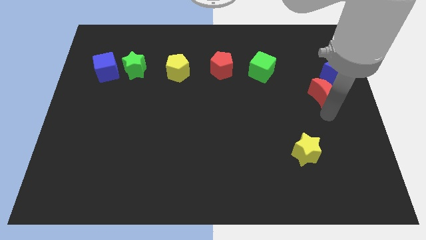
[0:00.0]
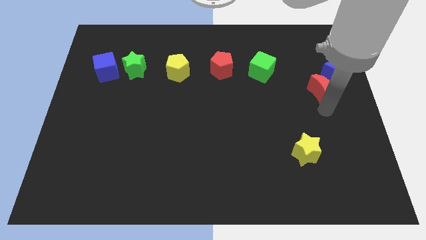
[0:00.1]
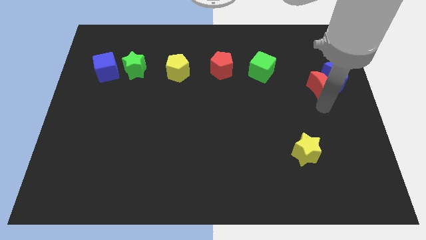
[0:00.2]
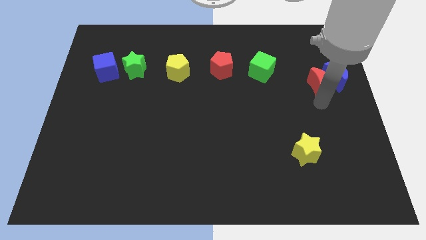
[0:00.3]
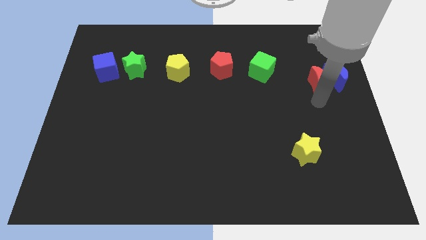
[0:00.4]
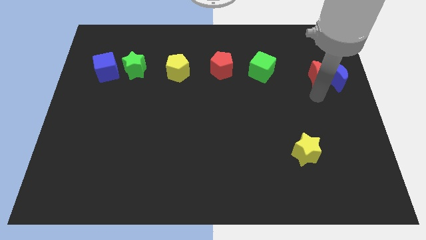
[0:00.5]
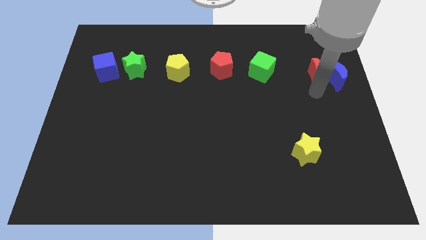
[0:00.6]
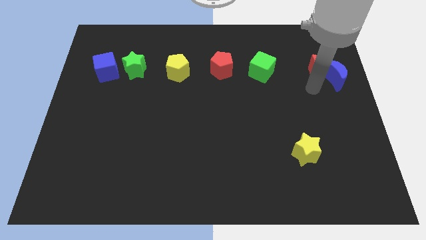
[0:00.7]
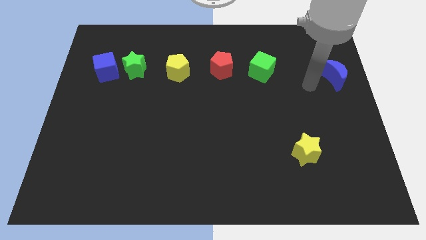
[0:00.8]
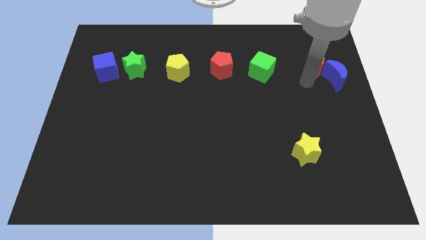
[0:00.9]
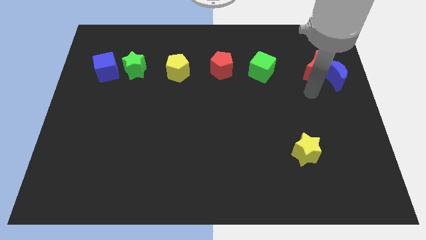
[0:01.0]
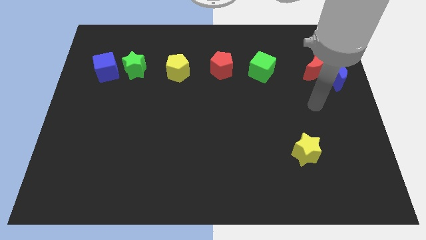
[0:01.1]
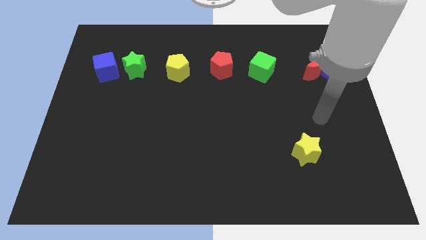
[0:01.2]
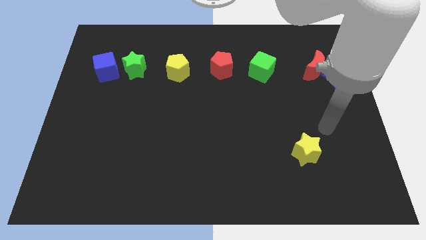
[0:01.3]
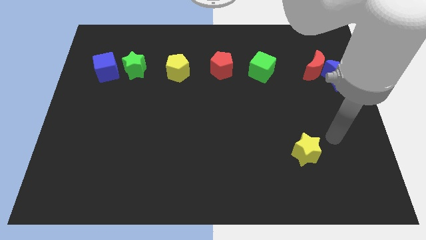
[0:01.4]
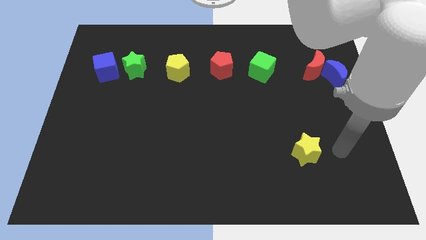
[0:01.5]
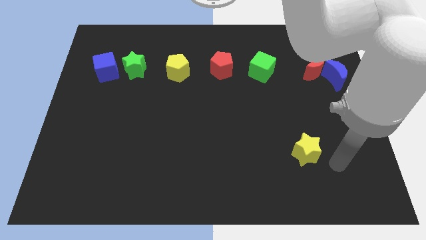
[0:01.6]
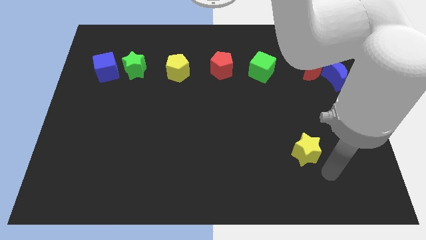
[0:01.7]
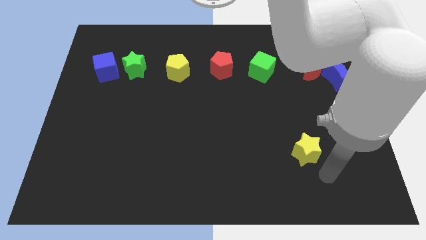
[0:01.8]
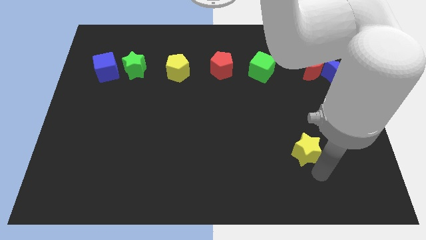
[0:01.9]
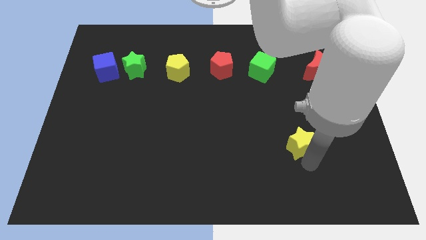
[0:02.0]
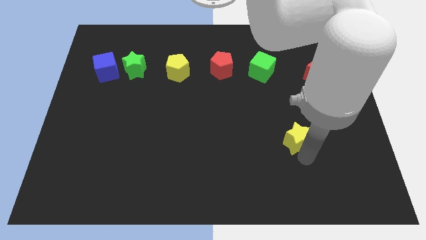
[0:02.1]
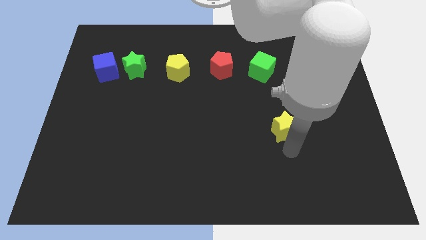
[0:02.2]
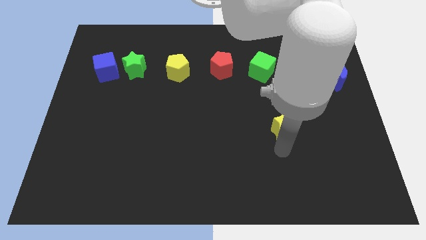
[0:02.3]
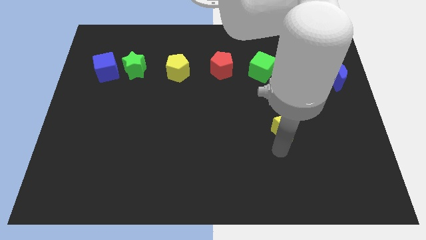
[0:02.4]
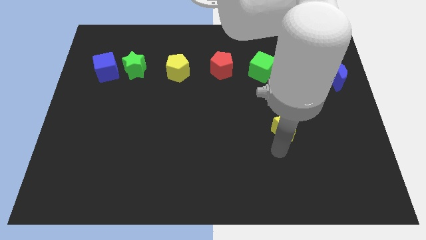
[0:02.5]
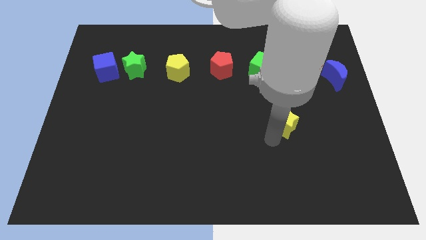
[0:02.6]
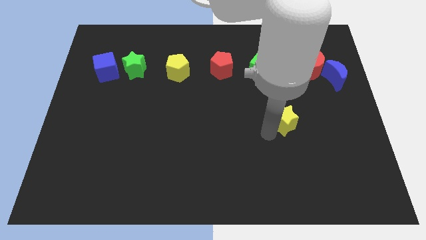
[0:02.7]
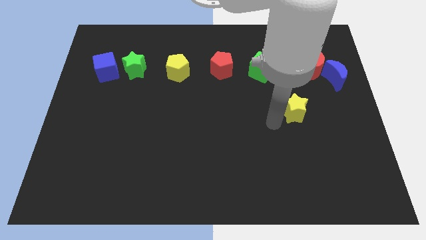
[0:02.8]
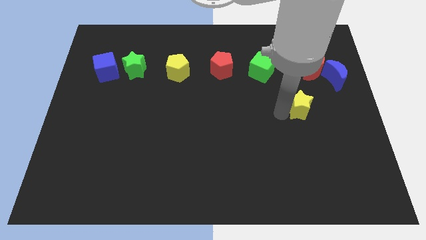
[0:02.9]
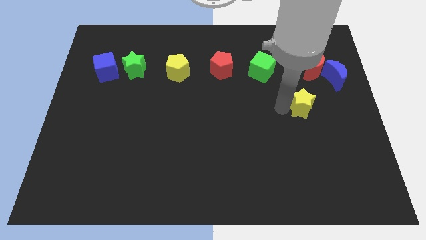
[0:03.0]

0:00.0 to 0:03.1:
move the yellow star towards the bottom side of the red moon

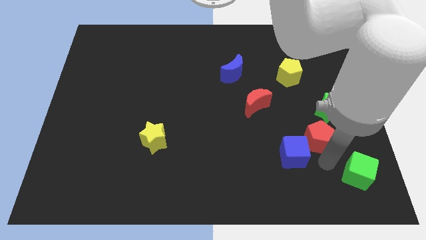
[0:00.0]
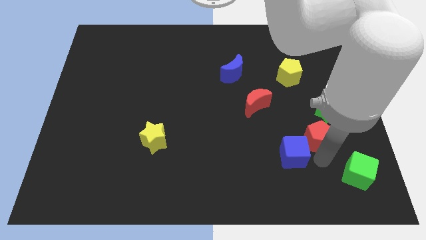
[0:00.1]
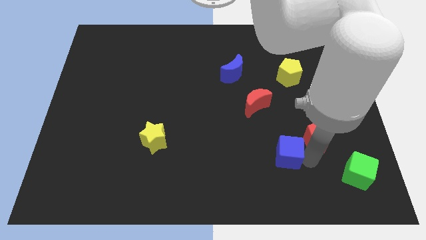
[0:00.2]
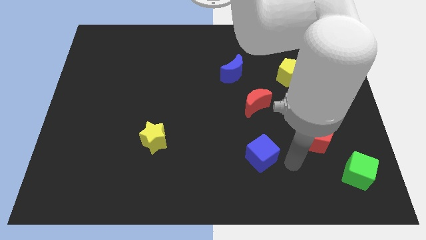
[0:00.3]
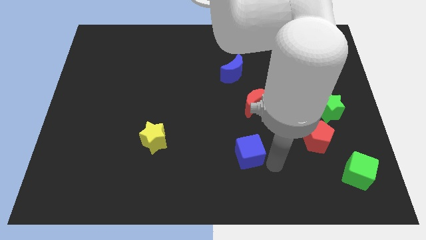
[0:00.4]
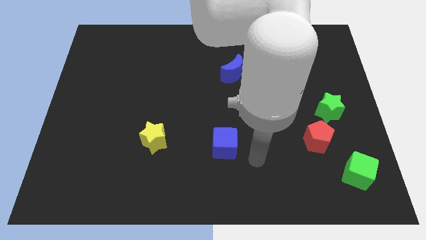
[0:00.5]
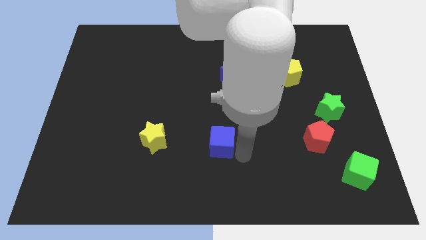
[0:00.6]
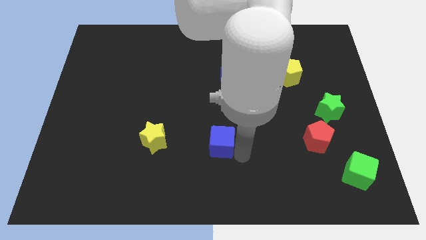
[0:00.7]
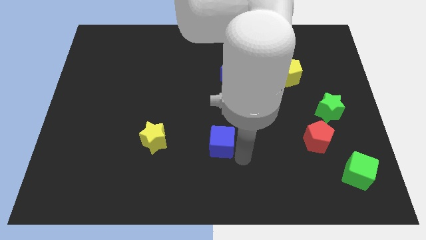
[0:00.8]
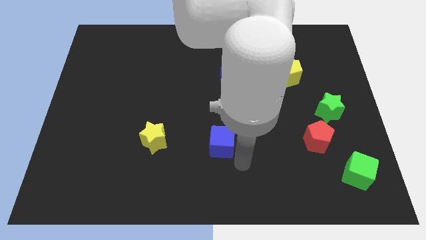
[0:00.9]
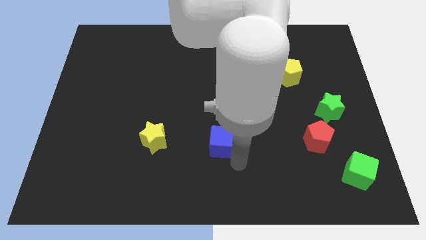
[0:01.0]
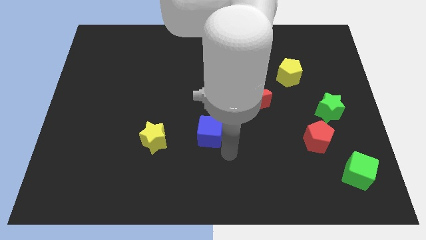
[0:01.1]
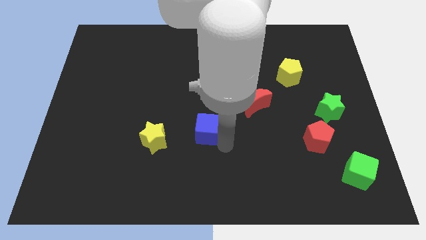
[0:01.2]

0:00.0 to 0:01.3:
move the blue cube to the left of the yellow star

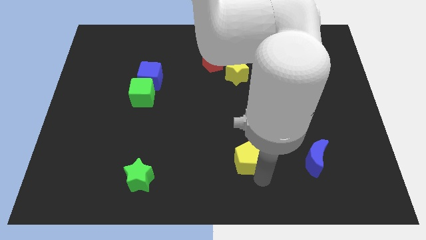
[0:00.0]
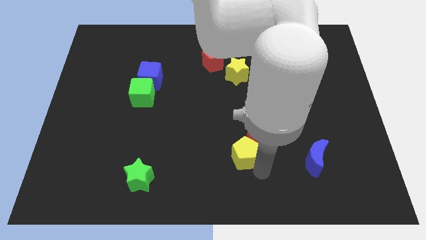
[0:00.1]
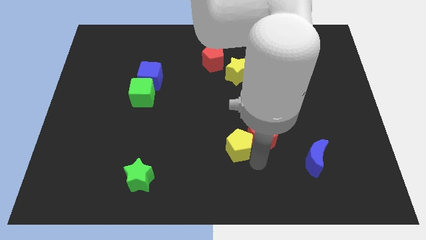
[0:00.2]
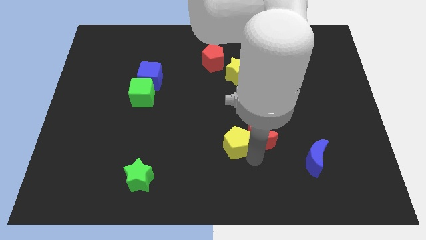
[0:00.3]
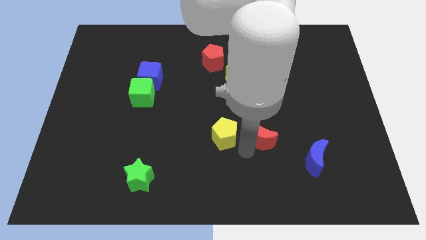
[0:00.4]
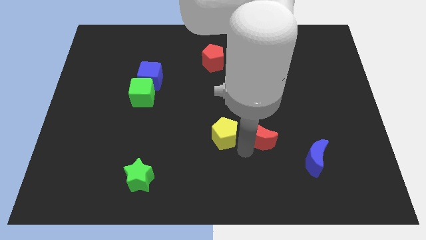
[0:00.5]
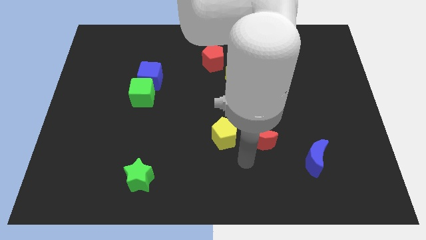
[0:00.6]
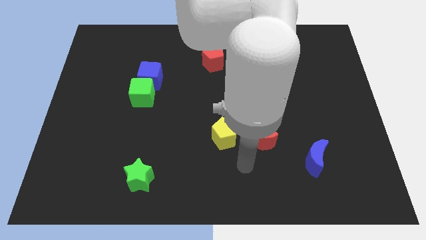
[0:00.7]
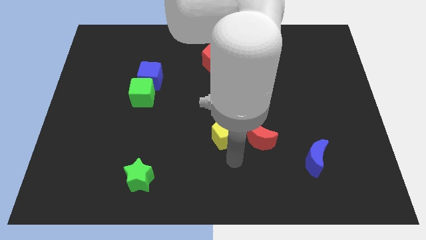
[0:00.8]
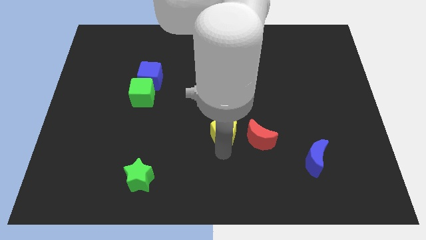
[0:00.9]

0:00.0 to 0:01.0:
push the yellow pentagon slightly upwards

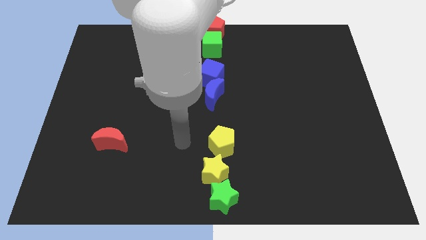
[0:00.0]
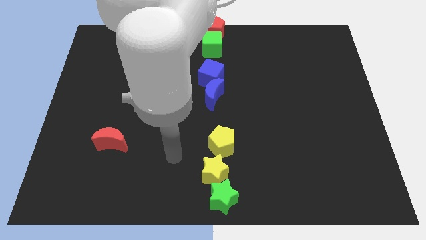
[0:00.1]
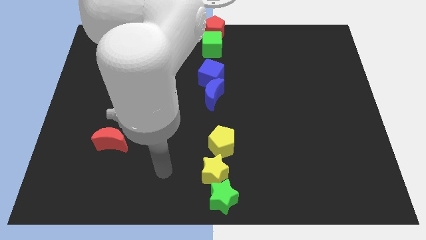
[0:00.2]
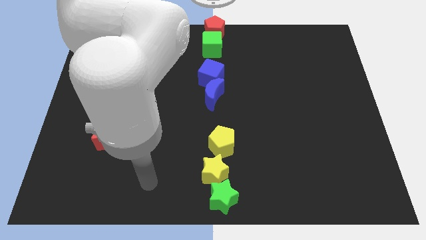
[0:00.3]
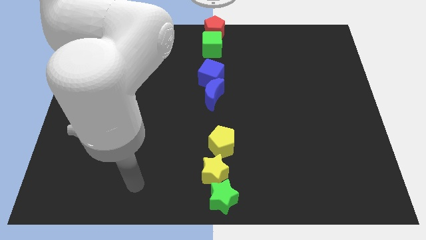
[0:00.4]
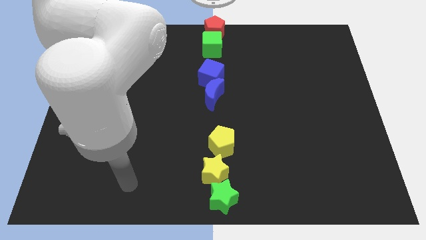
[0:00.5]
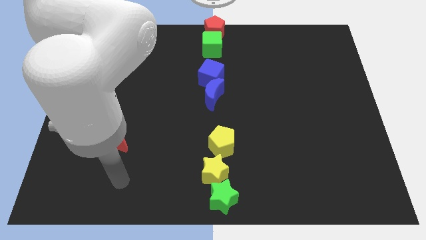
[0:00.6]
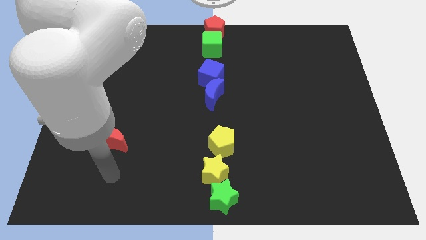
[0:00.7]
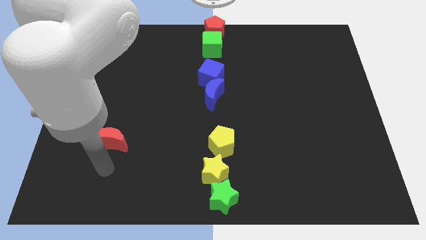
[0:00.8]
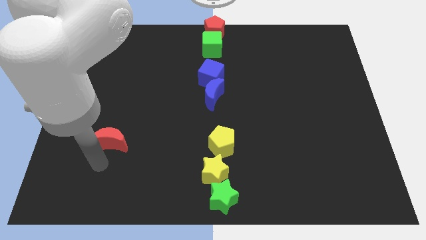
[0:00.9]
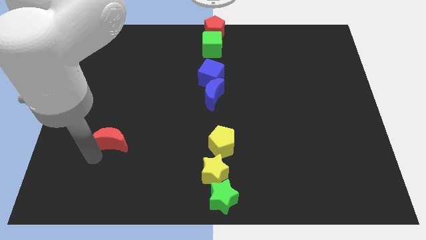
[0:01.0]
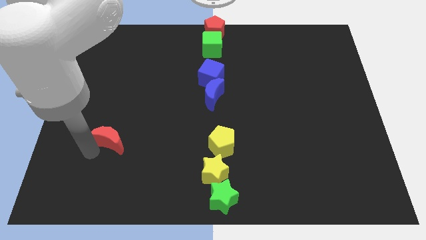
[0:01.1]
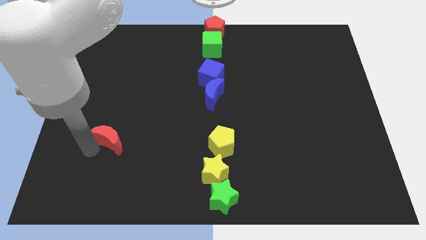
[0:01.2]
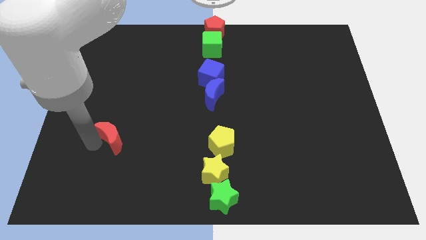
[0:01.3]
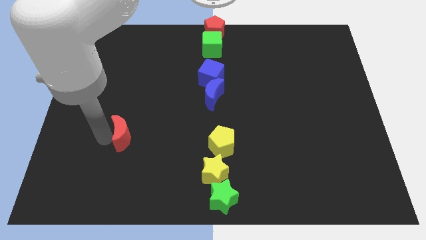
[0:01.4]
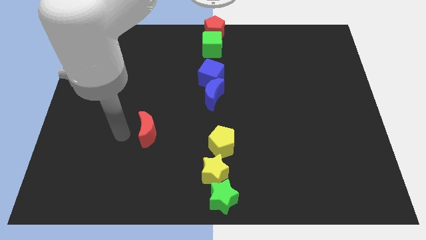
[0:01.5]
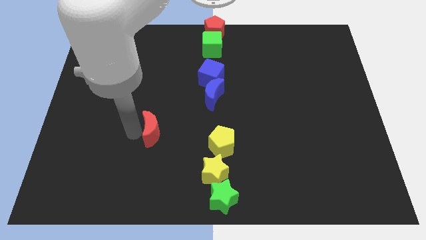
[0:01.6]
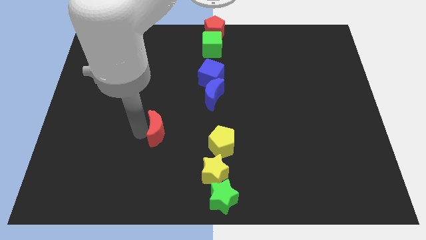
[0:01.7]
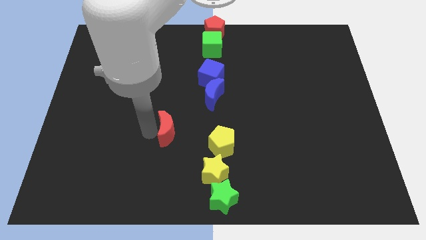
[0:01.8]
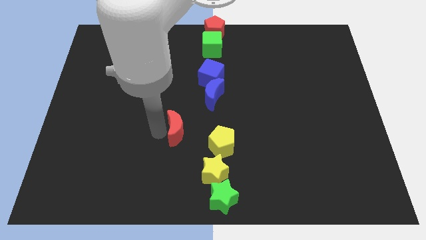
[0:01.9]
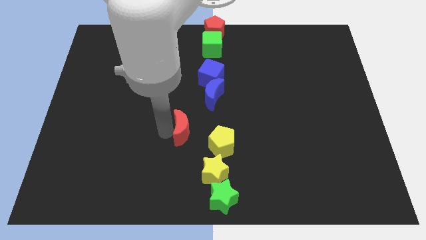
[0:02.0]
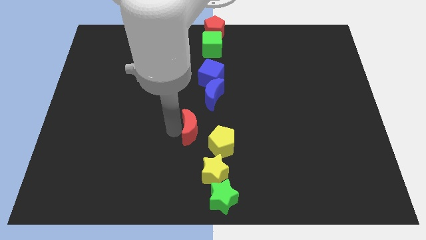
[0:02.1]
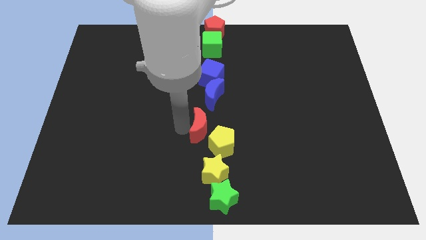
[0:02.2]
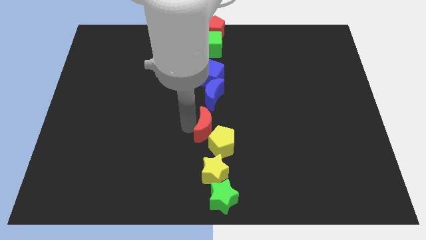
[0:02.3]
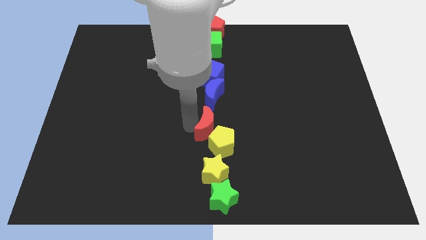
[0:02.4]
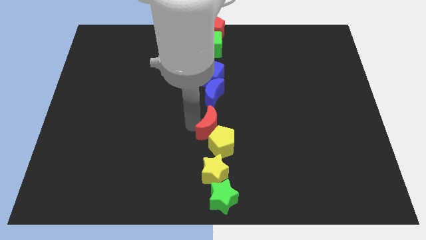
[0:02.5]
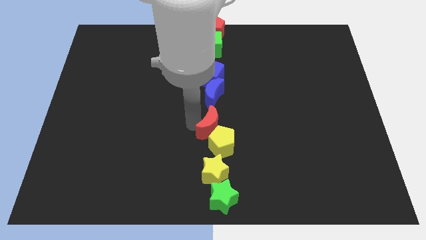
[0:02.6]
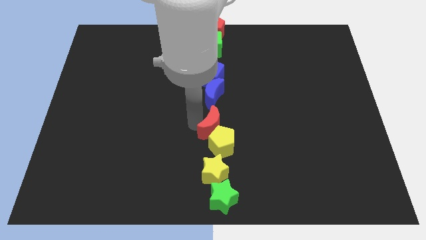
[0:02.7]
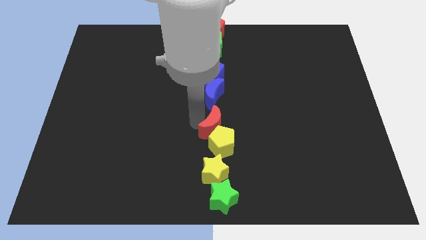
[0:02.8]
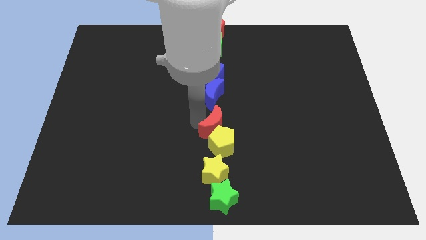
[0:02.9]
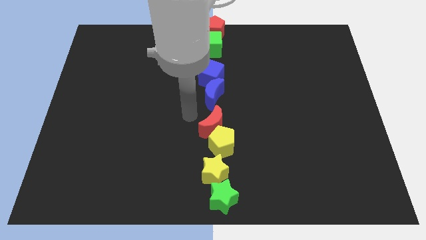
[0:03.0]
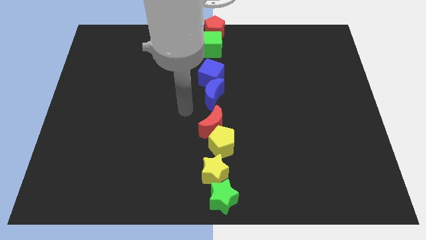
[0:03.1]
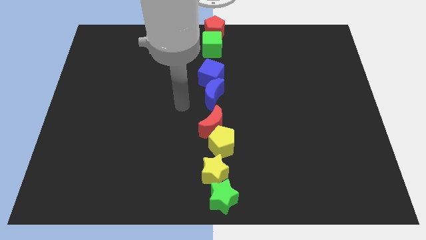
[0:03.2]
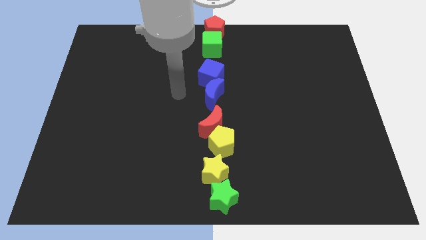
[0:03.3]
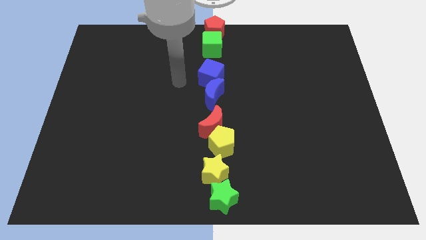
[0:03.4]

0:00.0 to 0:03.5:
place the red crescent above the yellow pentagon

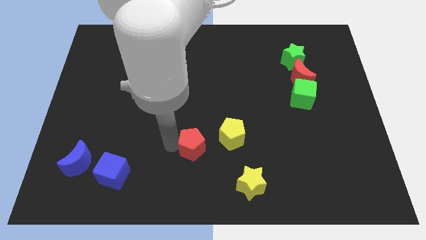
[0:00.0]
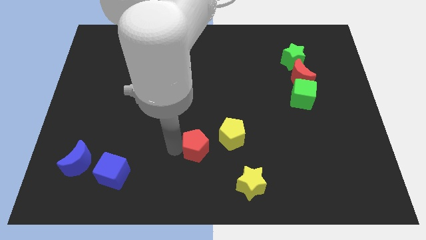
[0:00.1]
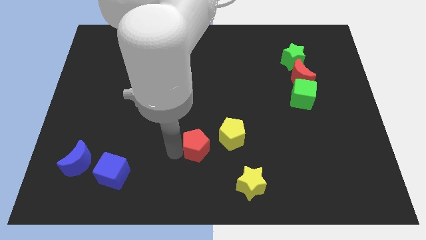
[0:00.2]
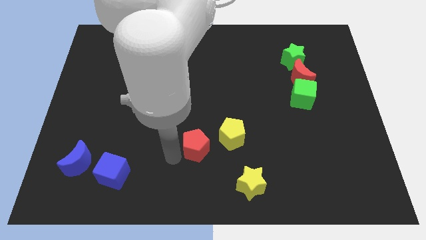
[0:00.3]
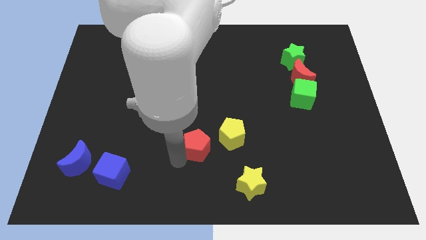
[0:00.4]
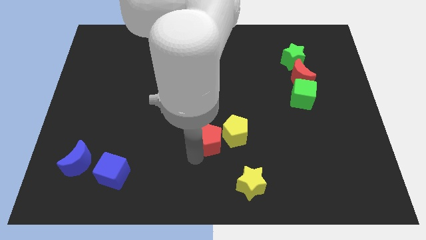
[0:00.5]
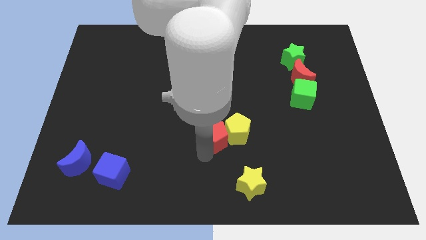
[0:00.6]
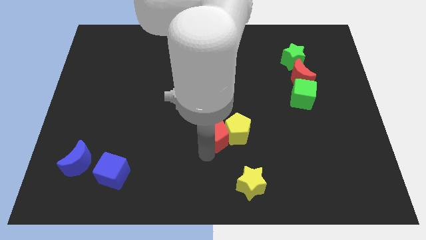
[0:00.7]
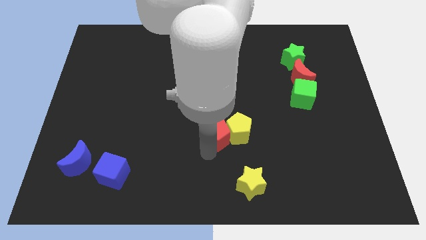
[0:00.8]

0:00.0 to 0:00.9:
push the red pentagon into the yellow pentagon
